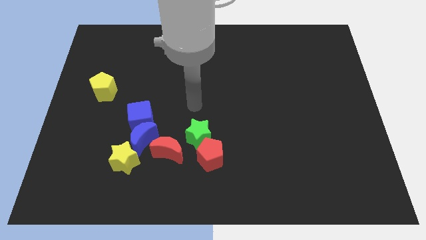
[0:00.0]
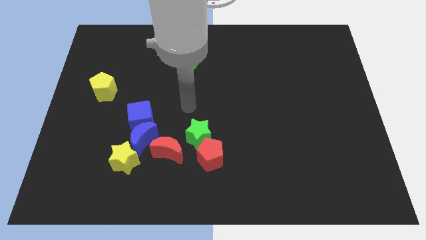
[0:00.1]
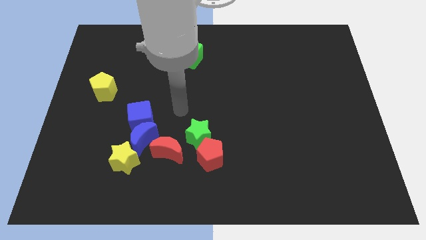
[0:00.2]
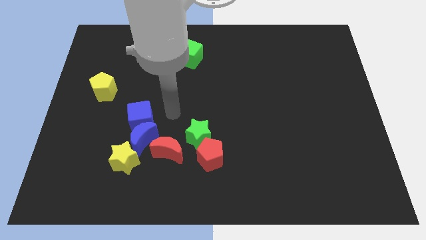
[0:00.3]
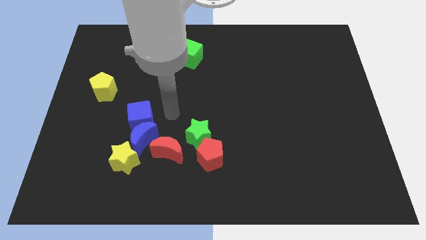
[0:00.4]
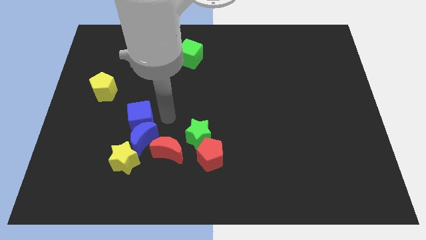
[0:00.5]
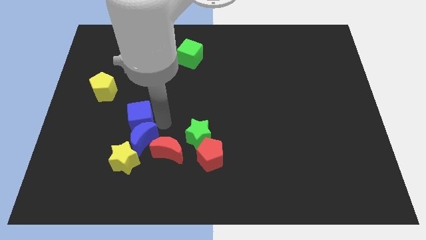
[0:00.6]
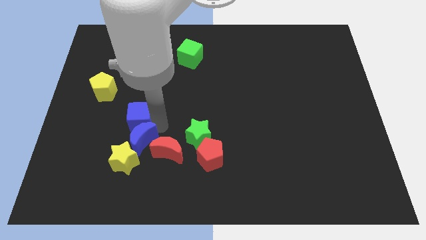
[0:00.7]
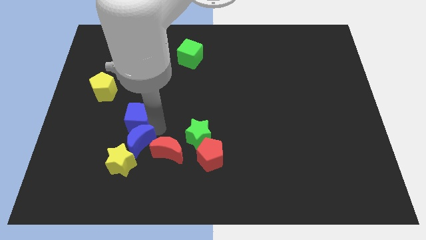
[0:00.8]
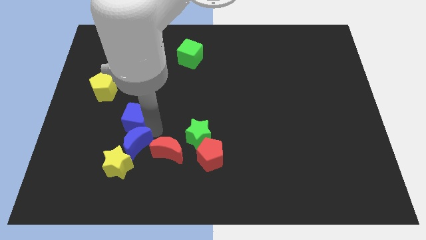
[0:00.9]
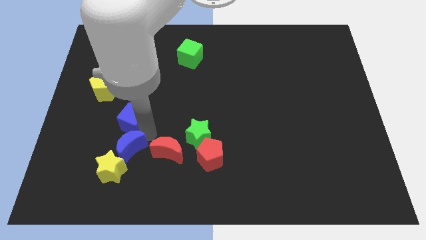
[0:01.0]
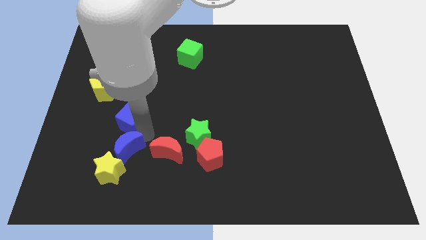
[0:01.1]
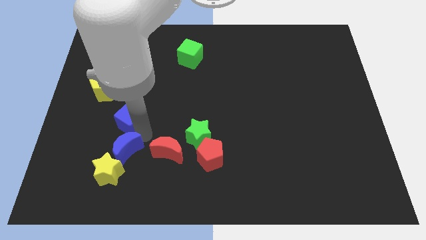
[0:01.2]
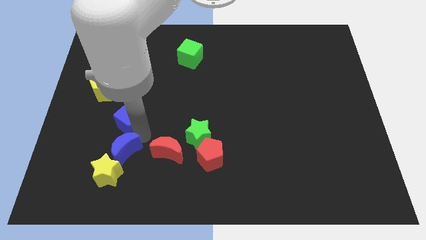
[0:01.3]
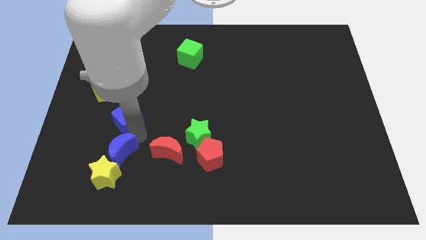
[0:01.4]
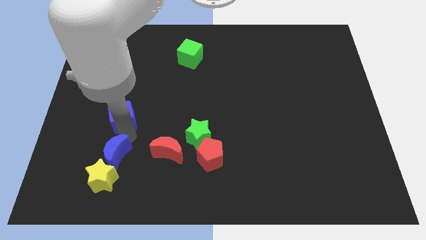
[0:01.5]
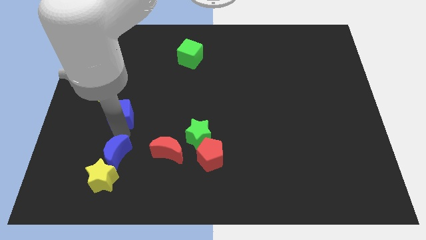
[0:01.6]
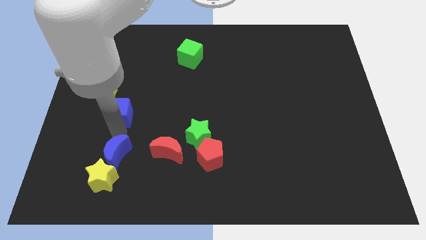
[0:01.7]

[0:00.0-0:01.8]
push the blue moon to the bottom left of the board

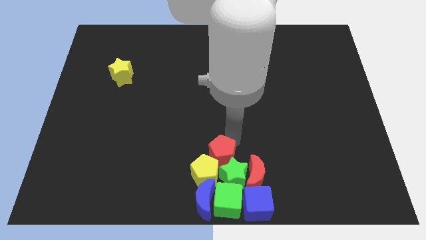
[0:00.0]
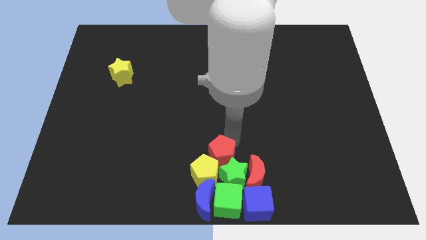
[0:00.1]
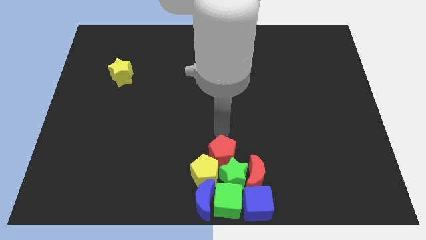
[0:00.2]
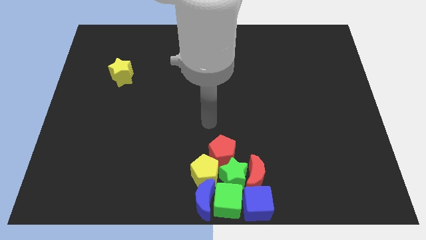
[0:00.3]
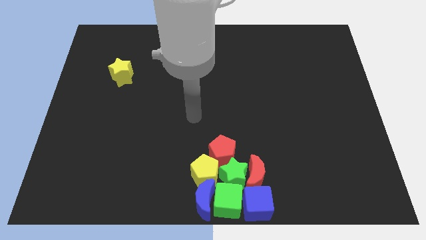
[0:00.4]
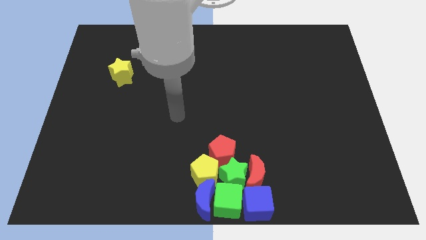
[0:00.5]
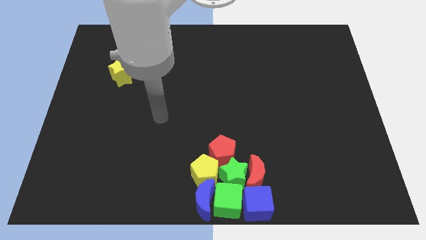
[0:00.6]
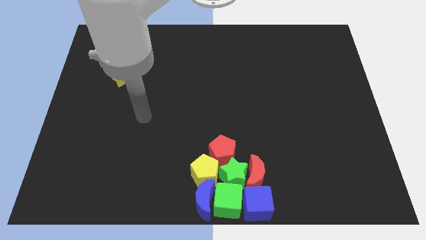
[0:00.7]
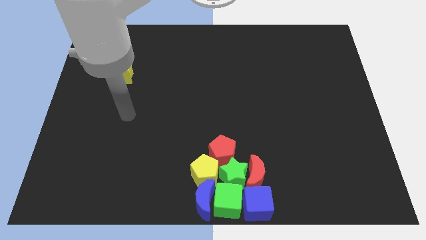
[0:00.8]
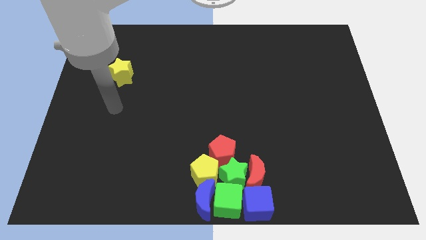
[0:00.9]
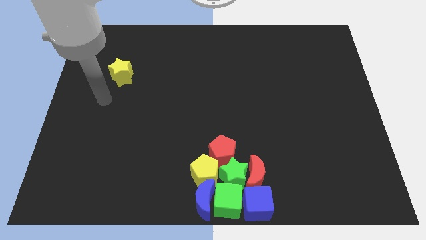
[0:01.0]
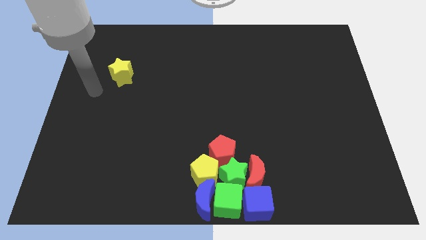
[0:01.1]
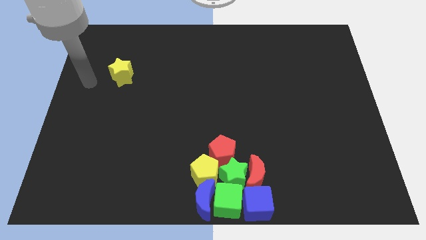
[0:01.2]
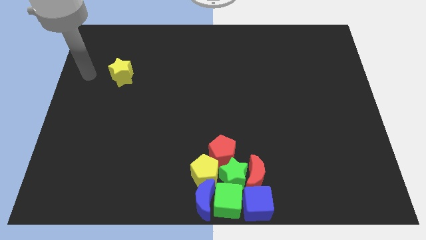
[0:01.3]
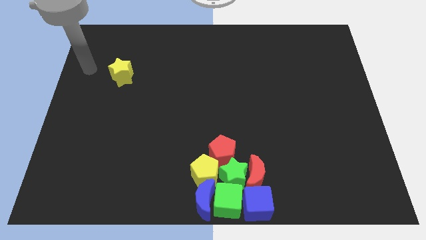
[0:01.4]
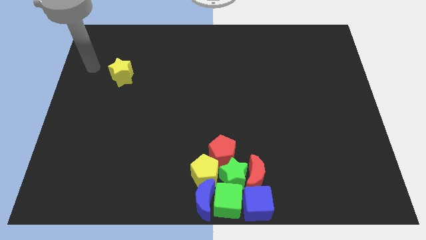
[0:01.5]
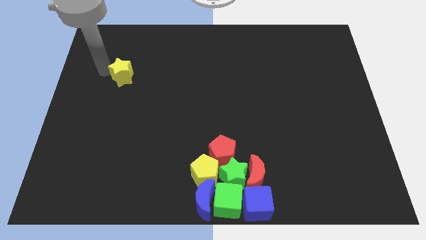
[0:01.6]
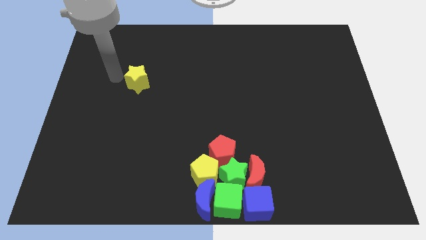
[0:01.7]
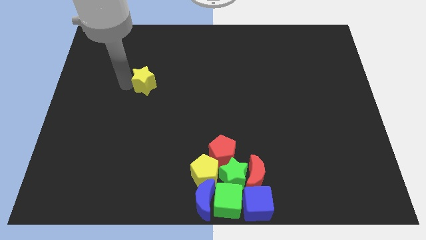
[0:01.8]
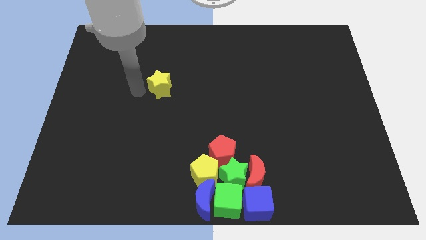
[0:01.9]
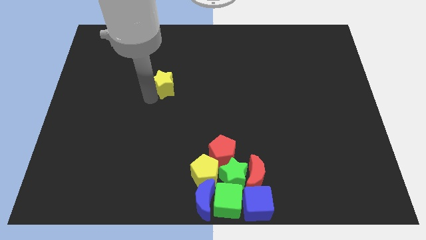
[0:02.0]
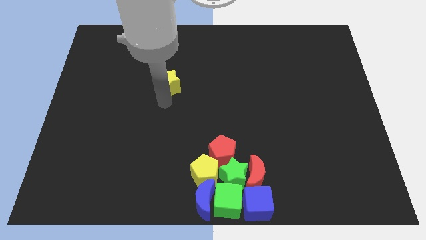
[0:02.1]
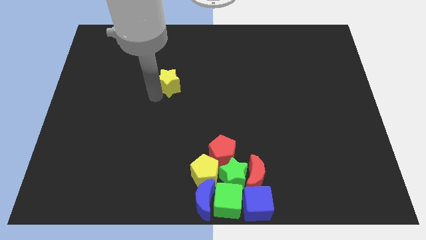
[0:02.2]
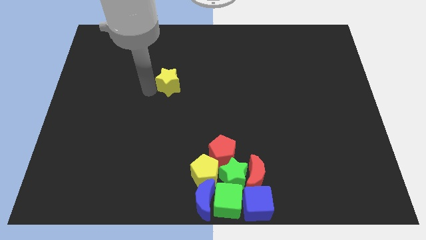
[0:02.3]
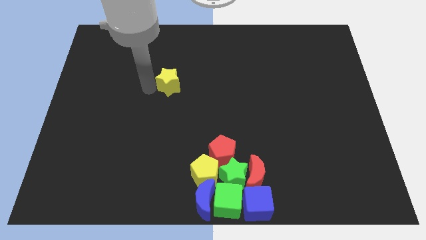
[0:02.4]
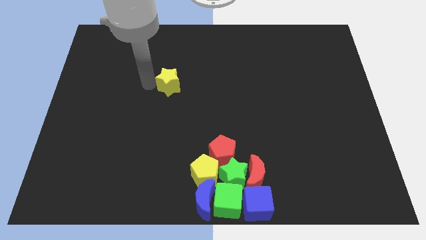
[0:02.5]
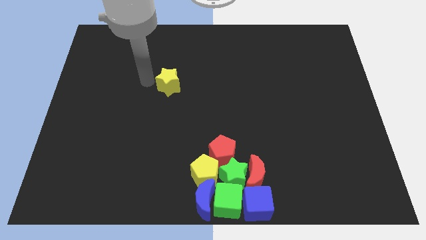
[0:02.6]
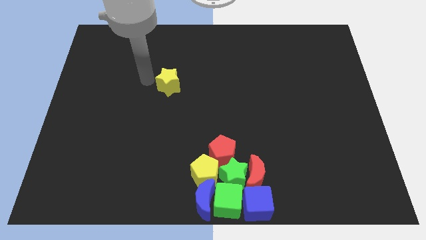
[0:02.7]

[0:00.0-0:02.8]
move the yellow star towards the center of the board

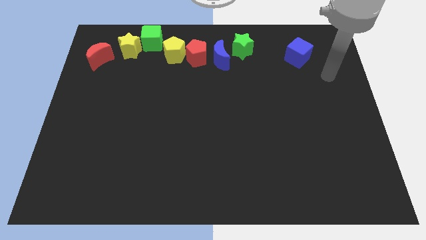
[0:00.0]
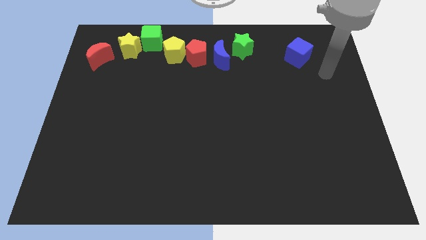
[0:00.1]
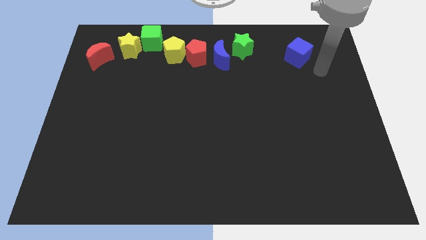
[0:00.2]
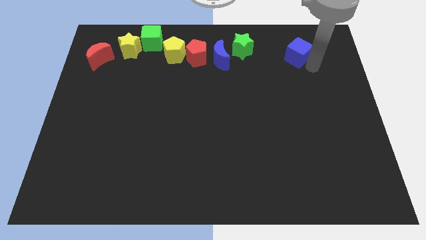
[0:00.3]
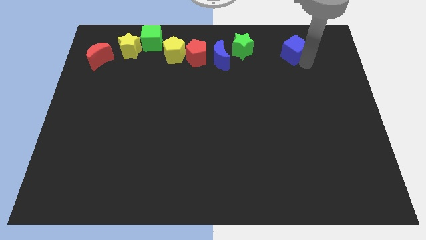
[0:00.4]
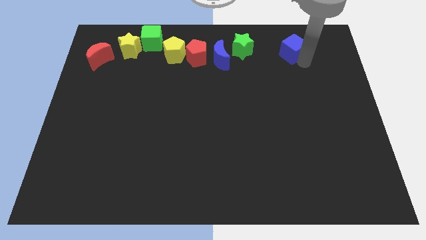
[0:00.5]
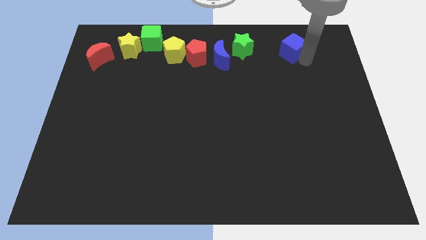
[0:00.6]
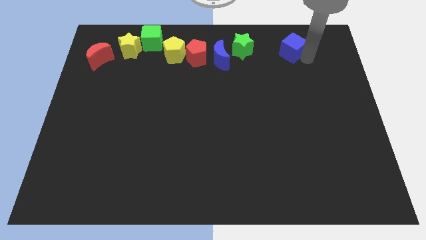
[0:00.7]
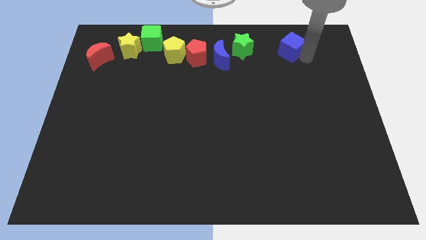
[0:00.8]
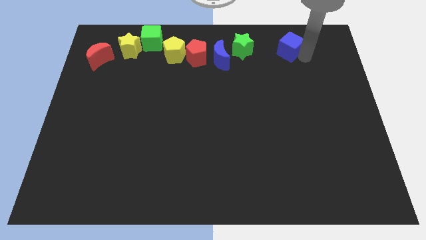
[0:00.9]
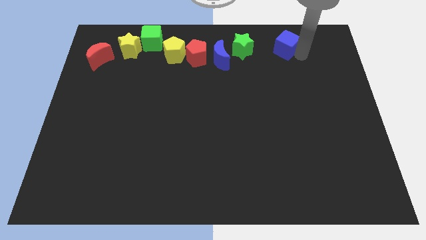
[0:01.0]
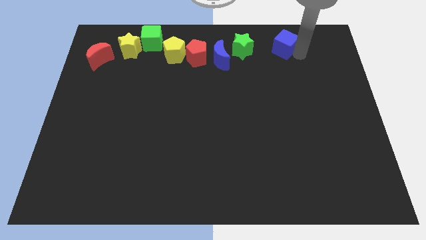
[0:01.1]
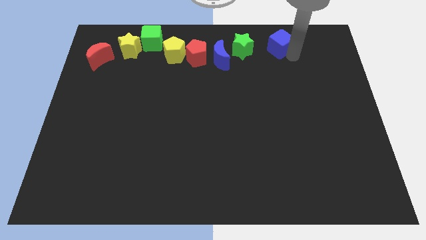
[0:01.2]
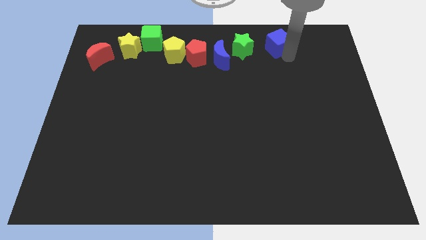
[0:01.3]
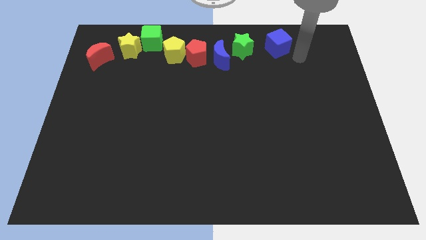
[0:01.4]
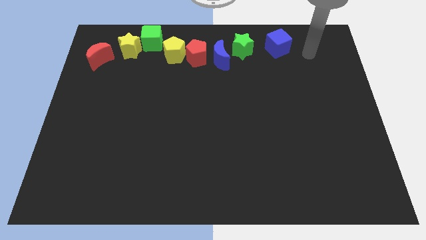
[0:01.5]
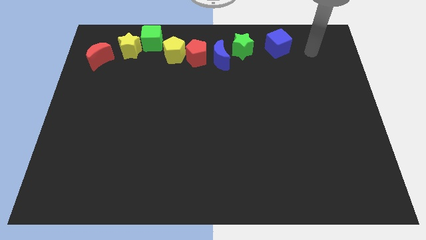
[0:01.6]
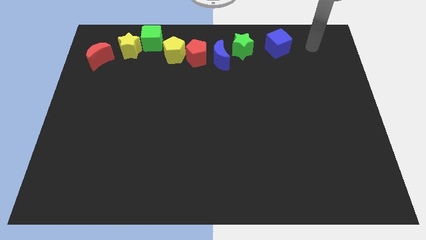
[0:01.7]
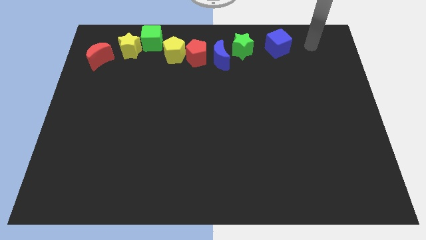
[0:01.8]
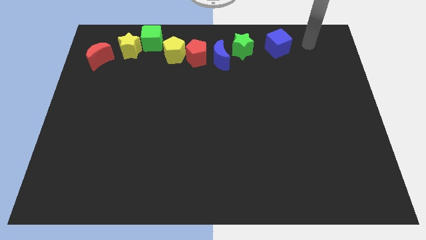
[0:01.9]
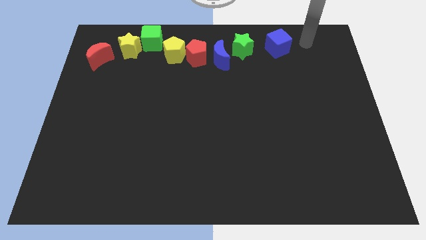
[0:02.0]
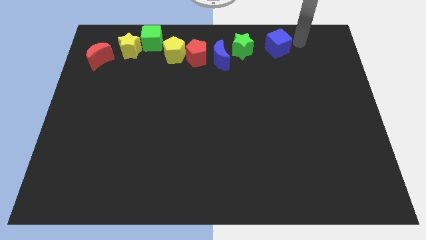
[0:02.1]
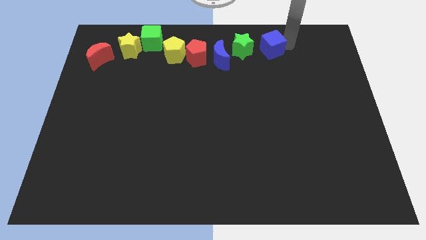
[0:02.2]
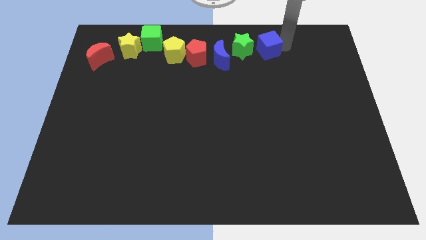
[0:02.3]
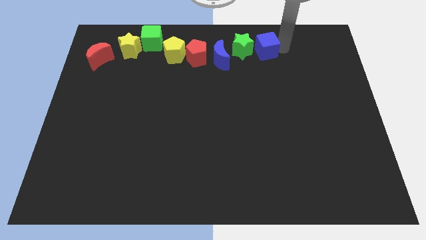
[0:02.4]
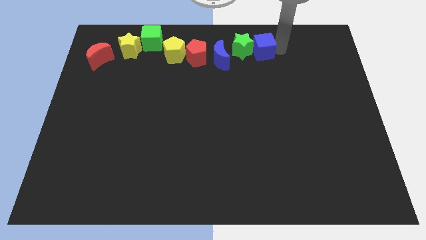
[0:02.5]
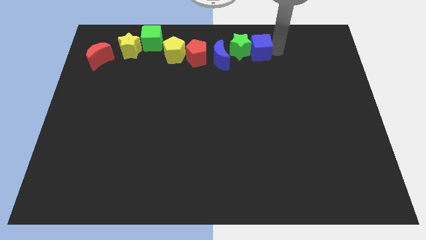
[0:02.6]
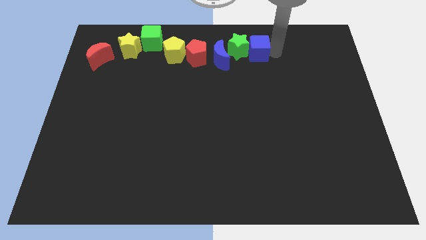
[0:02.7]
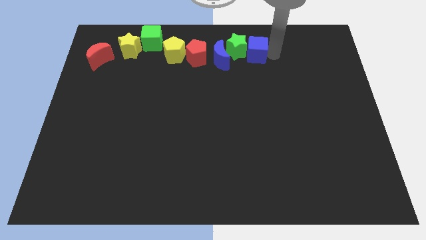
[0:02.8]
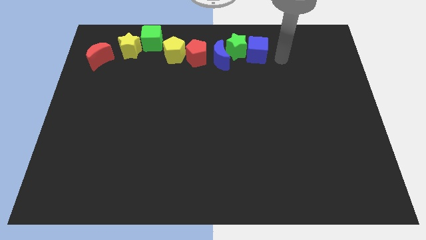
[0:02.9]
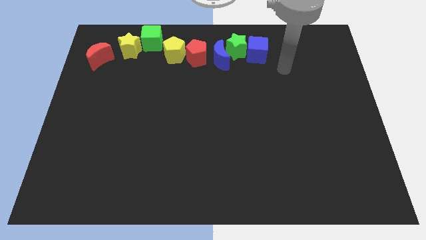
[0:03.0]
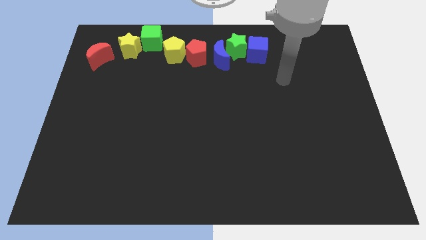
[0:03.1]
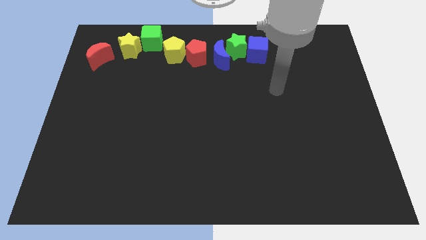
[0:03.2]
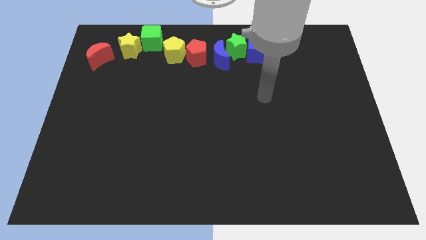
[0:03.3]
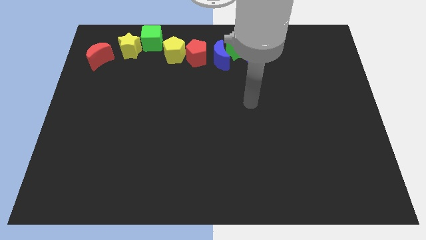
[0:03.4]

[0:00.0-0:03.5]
push the blue cube into the green star

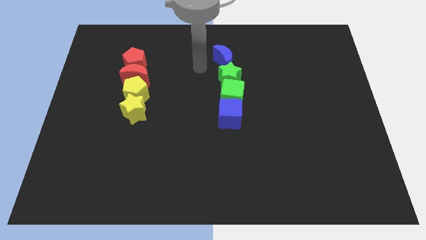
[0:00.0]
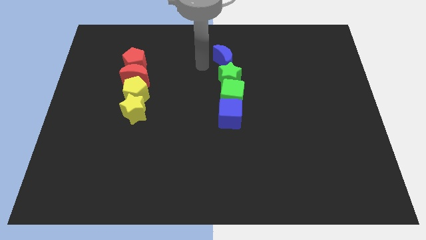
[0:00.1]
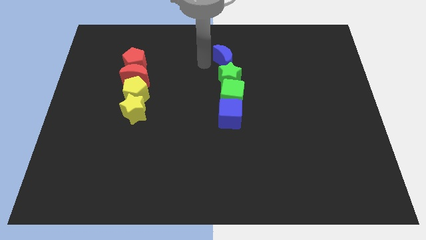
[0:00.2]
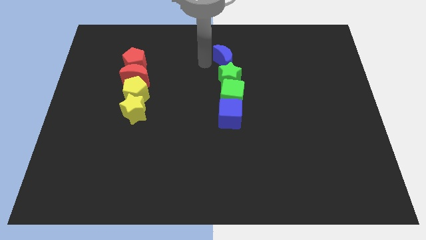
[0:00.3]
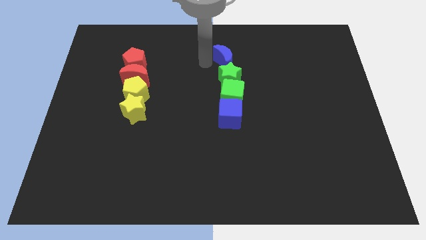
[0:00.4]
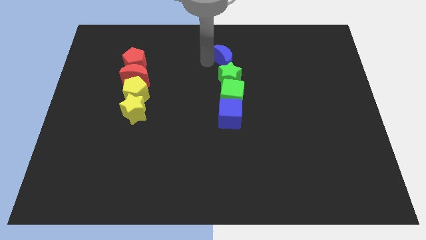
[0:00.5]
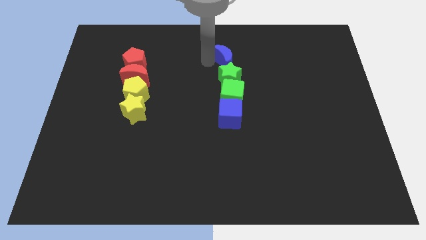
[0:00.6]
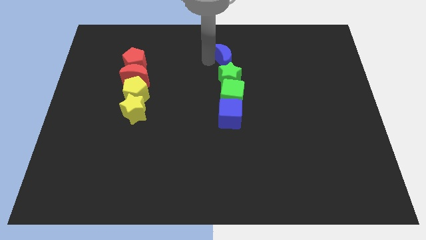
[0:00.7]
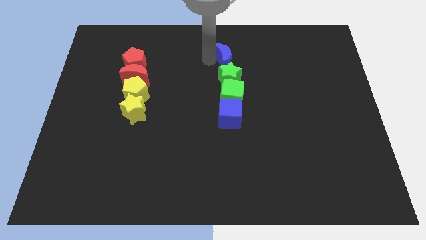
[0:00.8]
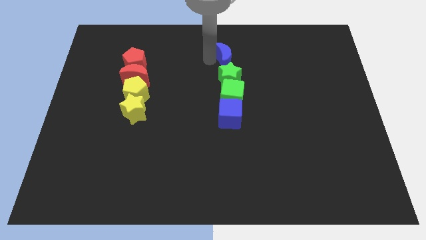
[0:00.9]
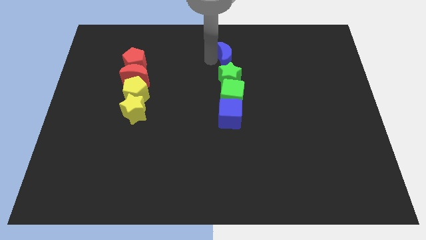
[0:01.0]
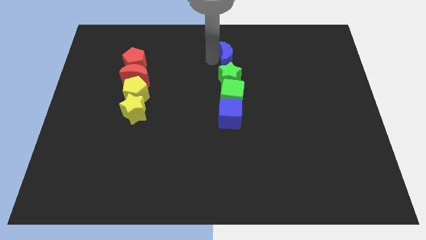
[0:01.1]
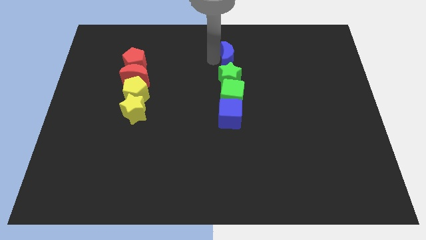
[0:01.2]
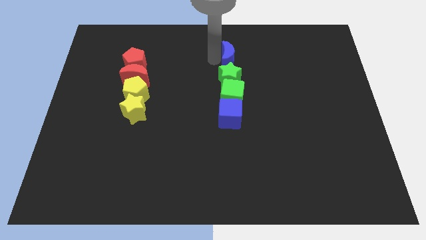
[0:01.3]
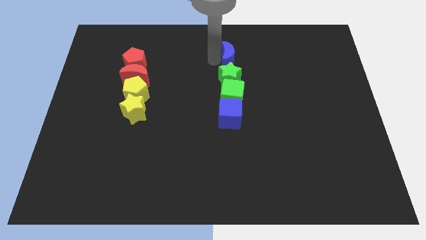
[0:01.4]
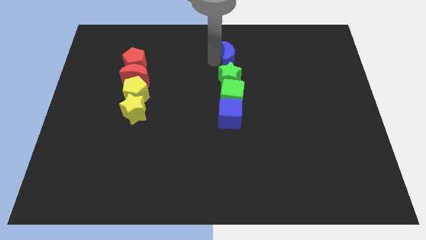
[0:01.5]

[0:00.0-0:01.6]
slide the blue moon slightly to the right
